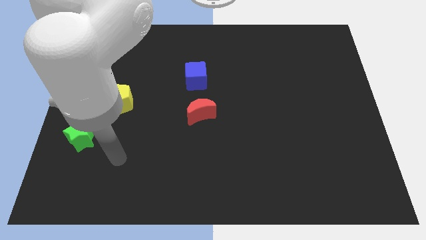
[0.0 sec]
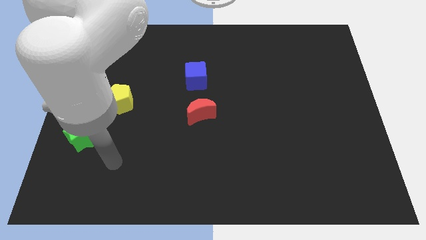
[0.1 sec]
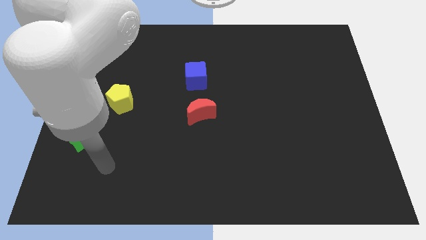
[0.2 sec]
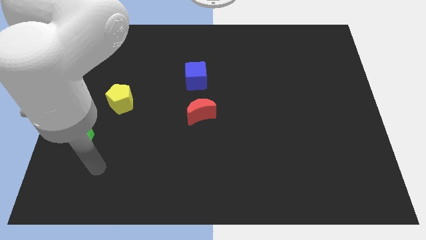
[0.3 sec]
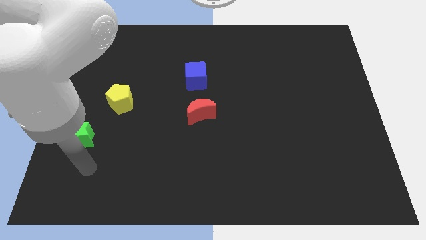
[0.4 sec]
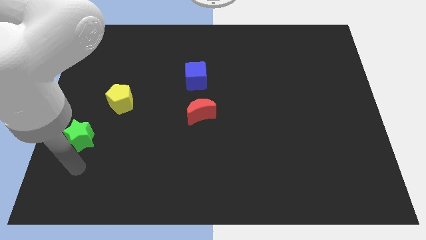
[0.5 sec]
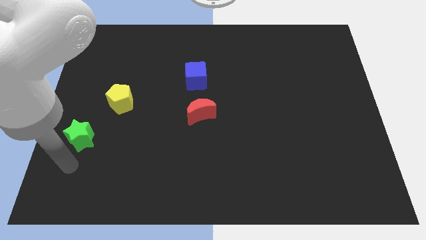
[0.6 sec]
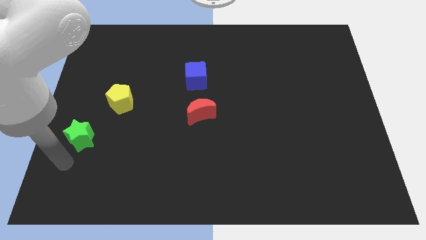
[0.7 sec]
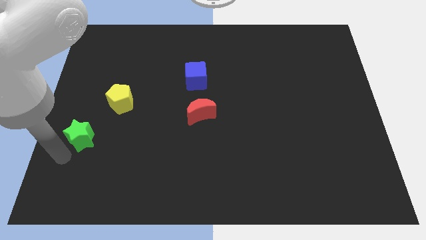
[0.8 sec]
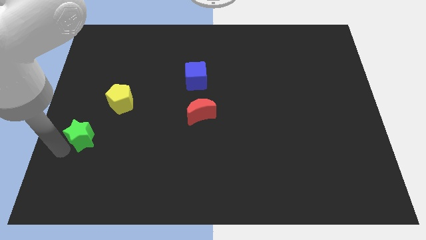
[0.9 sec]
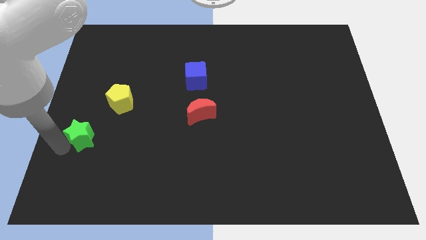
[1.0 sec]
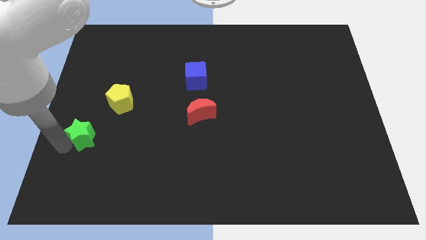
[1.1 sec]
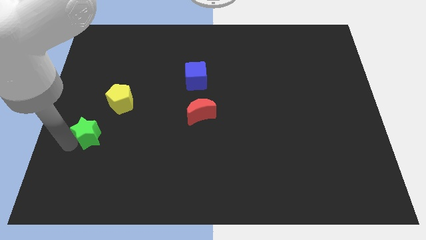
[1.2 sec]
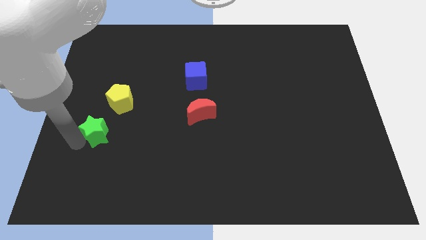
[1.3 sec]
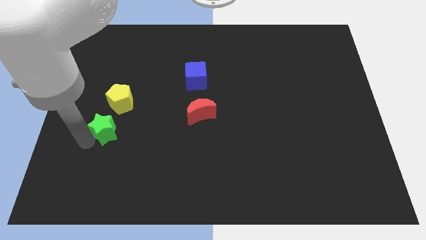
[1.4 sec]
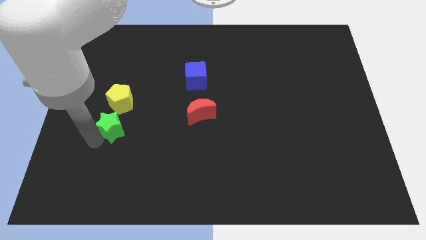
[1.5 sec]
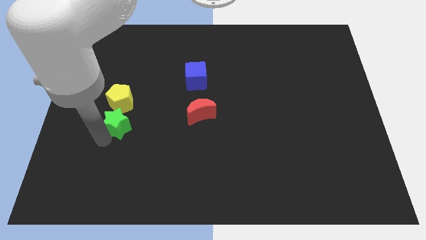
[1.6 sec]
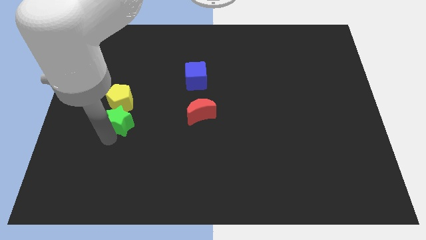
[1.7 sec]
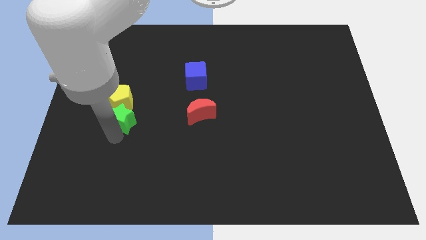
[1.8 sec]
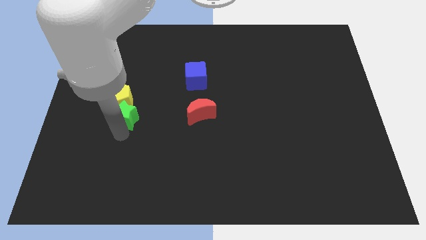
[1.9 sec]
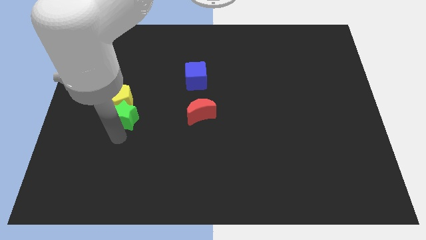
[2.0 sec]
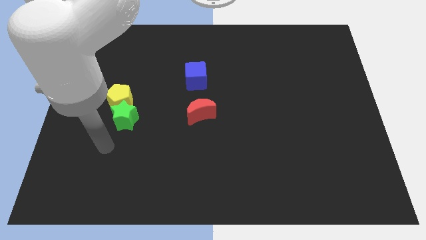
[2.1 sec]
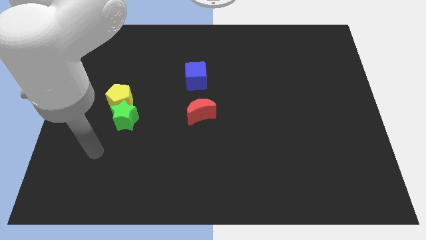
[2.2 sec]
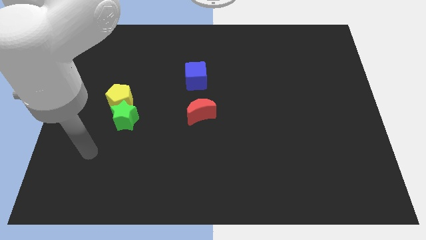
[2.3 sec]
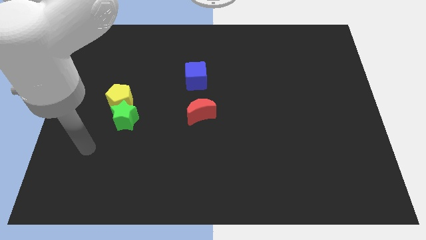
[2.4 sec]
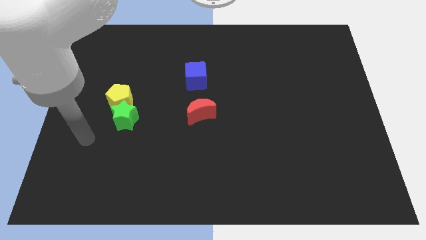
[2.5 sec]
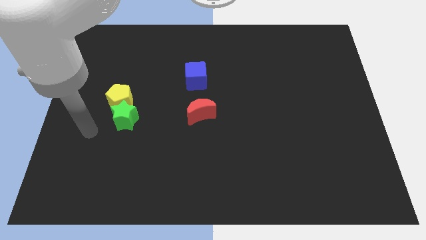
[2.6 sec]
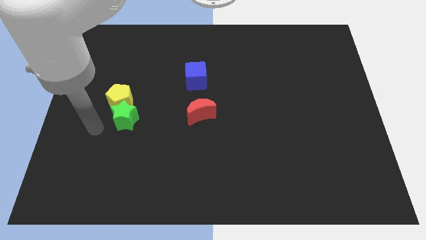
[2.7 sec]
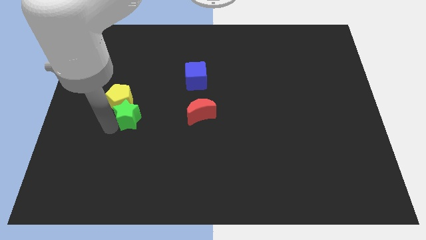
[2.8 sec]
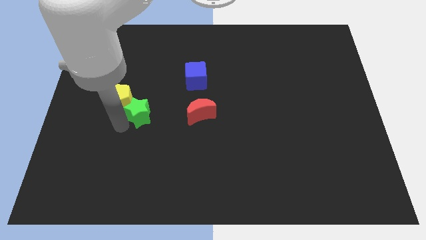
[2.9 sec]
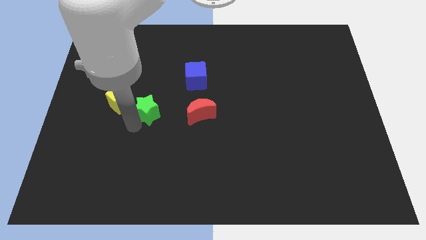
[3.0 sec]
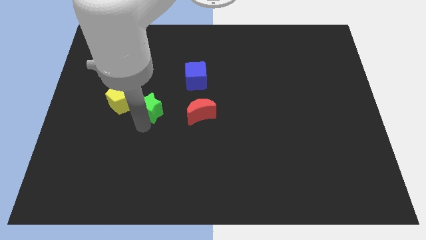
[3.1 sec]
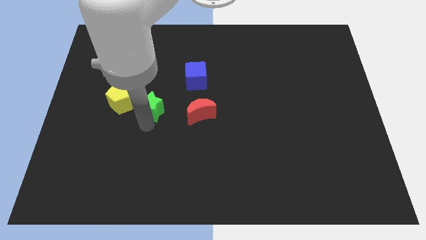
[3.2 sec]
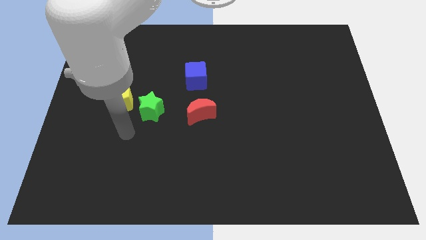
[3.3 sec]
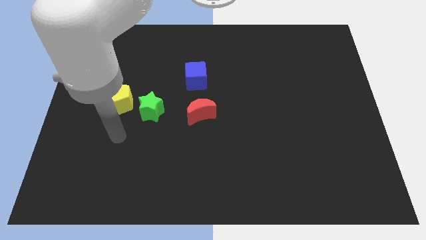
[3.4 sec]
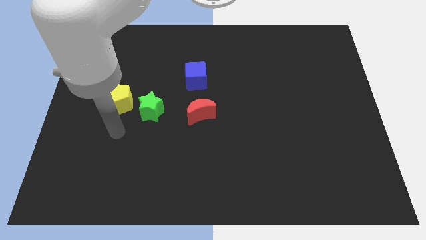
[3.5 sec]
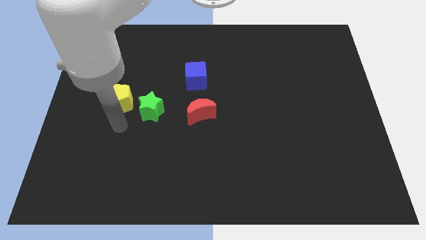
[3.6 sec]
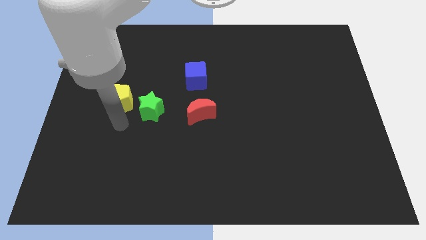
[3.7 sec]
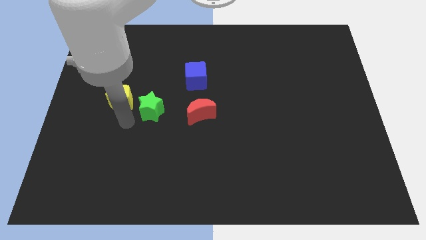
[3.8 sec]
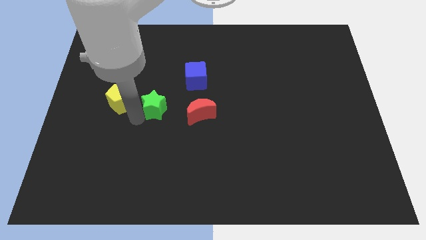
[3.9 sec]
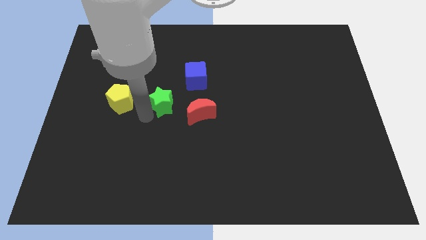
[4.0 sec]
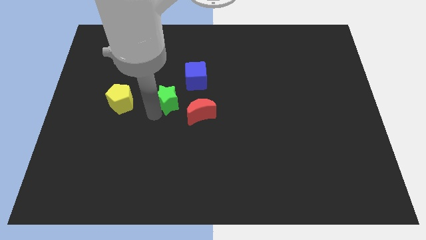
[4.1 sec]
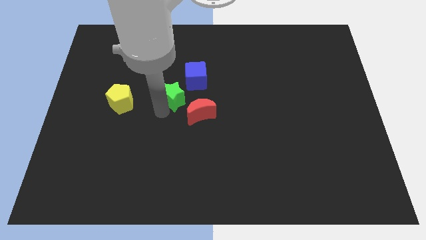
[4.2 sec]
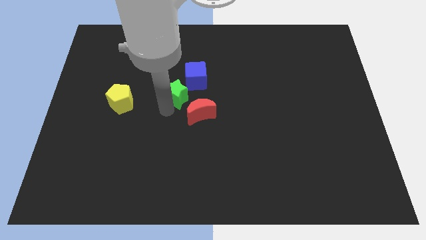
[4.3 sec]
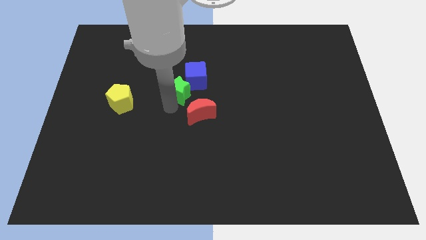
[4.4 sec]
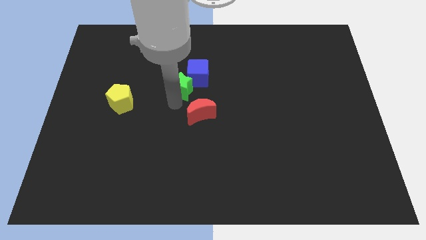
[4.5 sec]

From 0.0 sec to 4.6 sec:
move the green star next to the blue cube

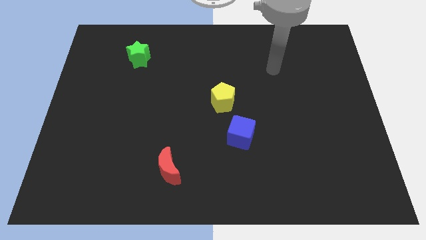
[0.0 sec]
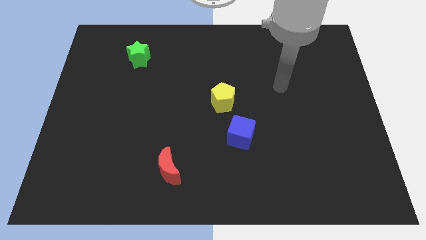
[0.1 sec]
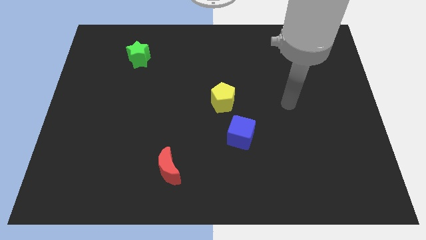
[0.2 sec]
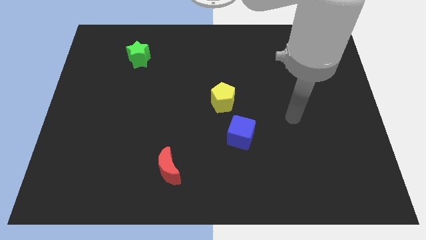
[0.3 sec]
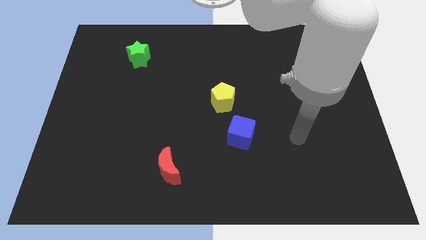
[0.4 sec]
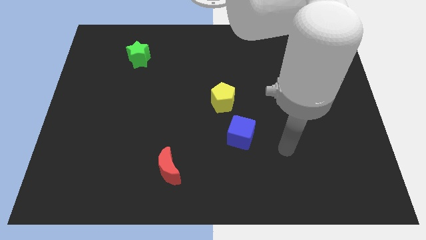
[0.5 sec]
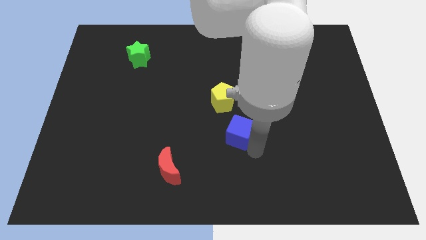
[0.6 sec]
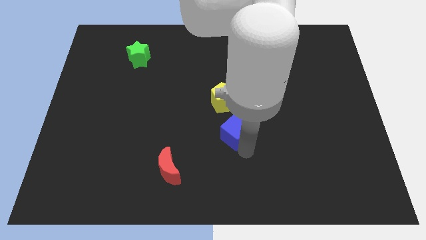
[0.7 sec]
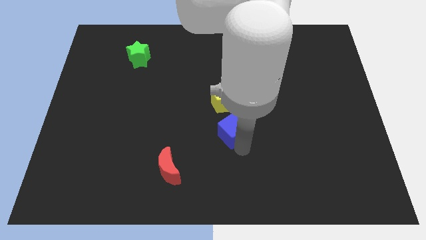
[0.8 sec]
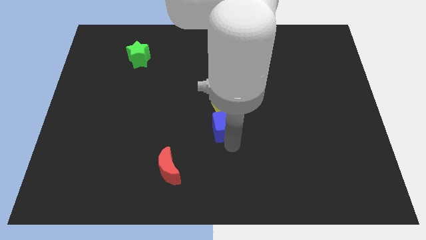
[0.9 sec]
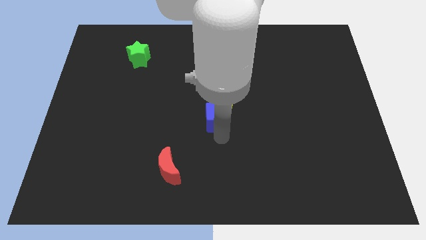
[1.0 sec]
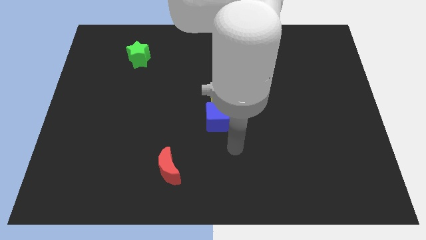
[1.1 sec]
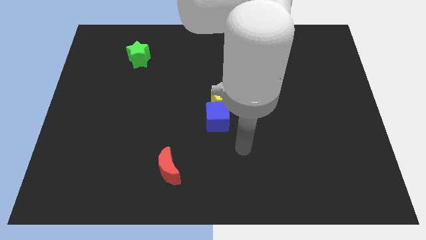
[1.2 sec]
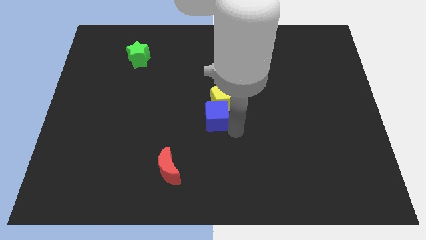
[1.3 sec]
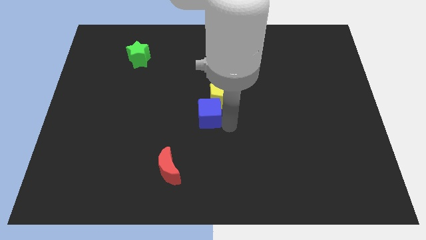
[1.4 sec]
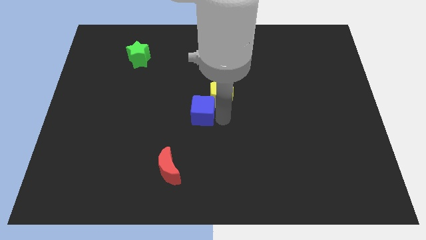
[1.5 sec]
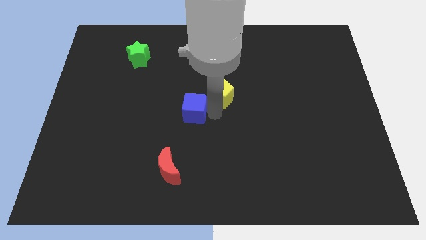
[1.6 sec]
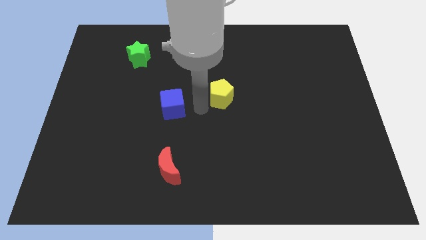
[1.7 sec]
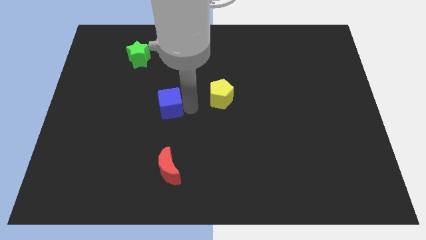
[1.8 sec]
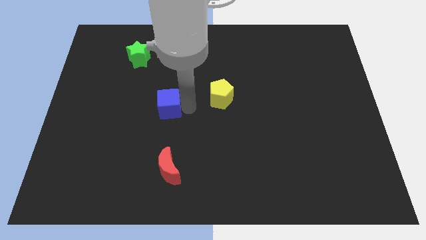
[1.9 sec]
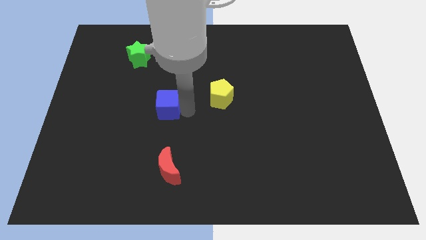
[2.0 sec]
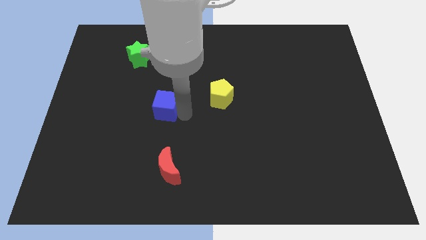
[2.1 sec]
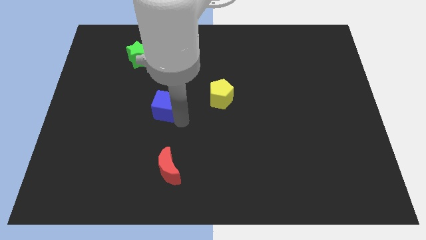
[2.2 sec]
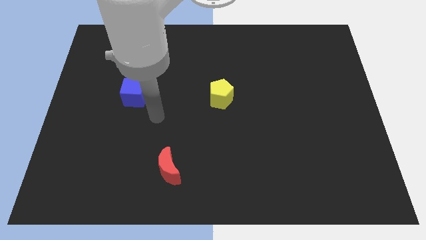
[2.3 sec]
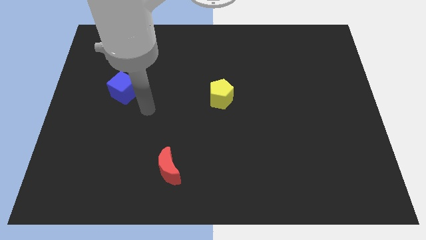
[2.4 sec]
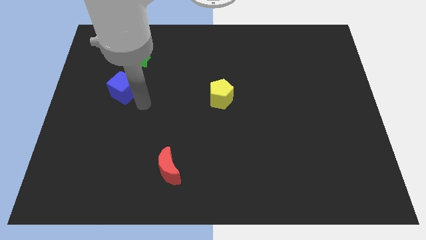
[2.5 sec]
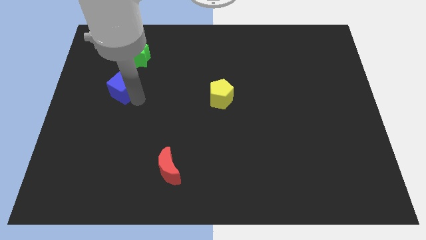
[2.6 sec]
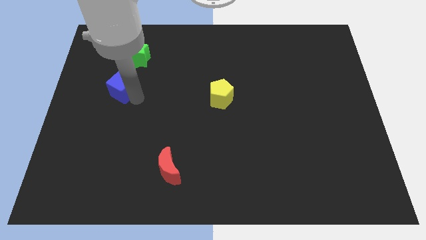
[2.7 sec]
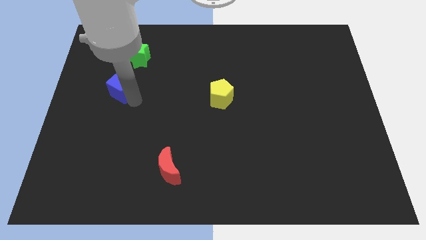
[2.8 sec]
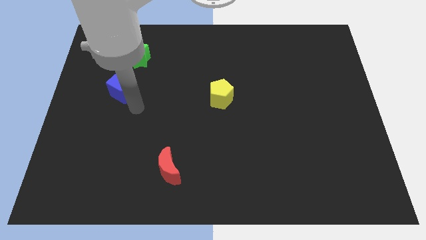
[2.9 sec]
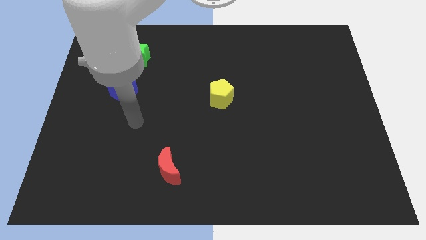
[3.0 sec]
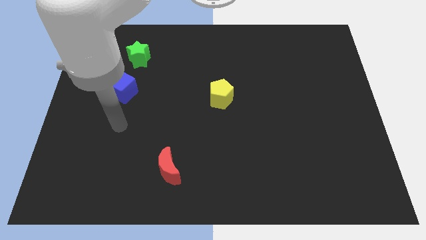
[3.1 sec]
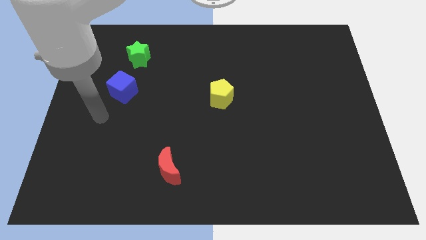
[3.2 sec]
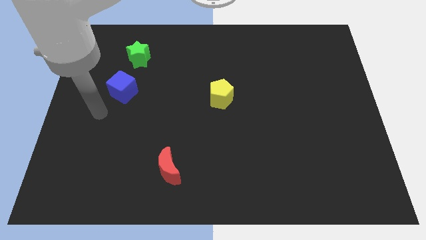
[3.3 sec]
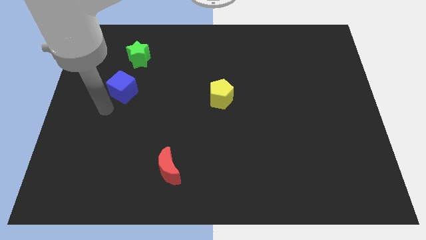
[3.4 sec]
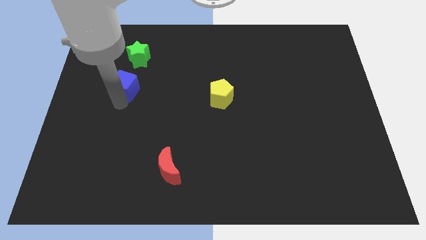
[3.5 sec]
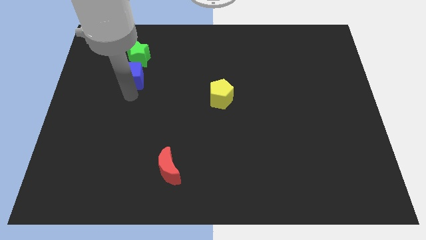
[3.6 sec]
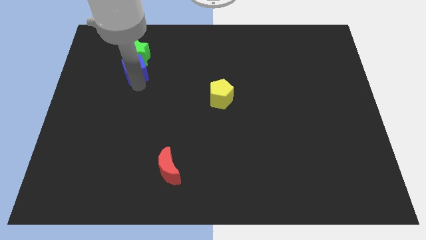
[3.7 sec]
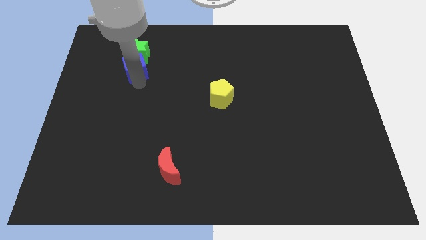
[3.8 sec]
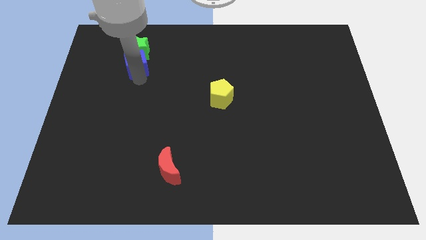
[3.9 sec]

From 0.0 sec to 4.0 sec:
slide the cube next to the green star

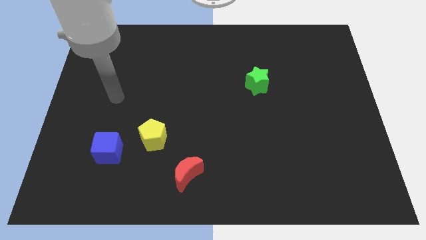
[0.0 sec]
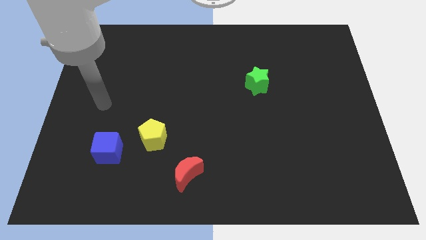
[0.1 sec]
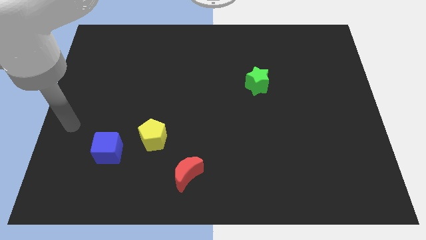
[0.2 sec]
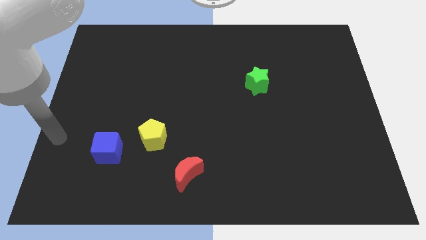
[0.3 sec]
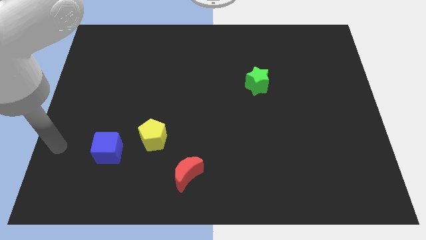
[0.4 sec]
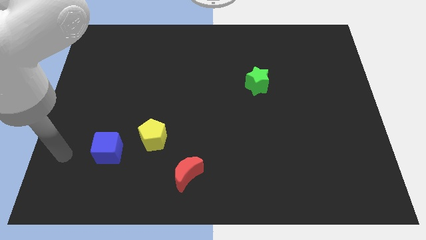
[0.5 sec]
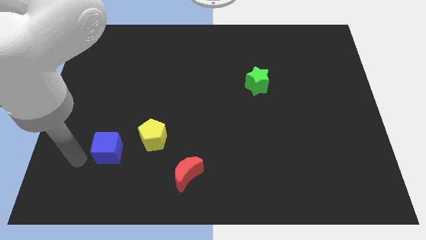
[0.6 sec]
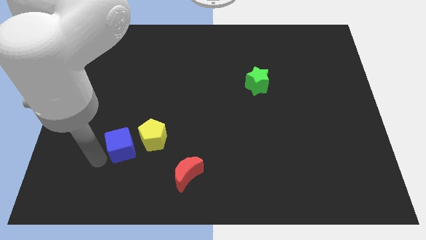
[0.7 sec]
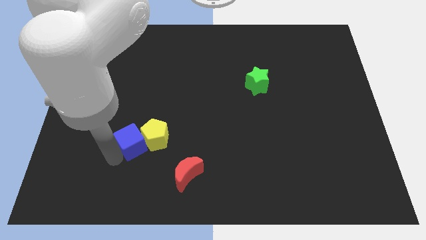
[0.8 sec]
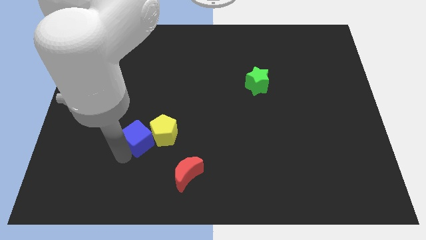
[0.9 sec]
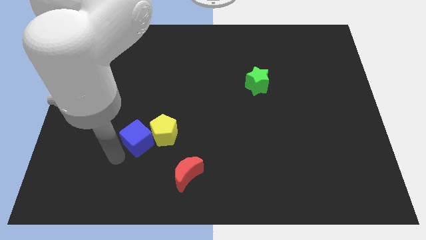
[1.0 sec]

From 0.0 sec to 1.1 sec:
put the blue block close to the yellow pentagon
